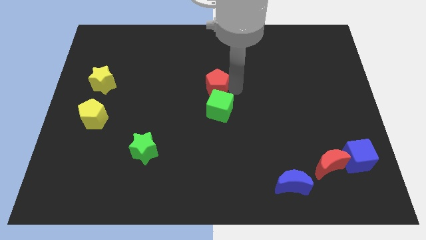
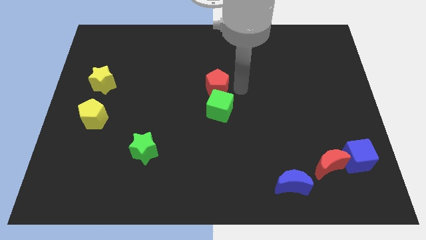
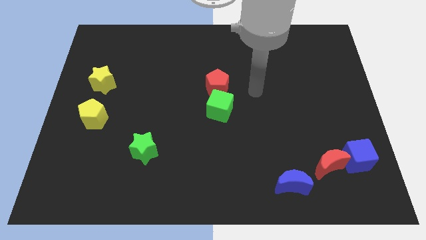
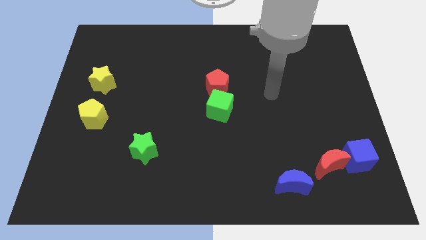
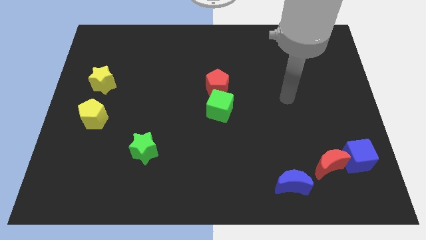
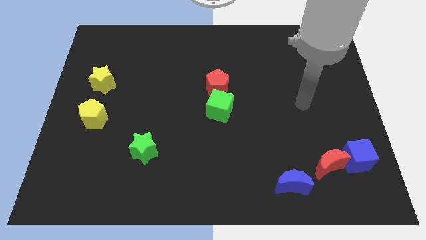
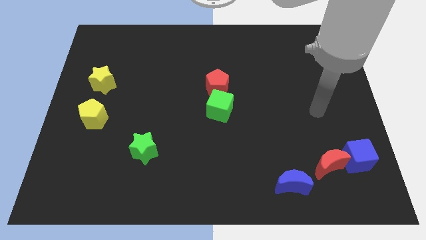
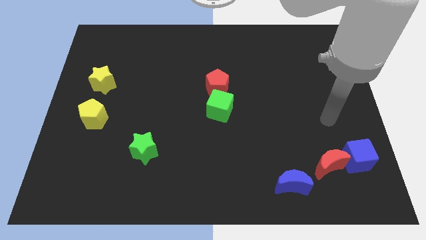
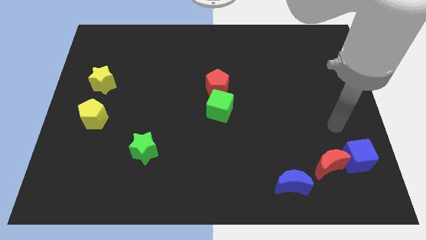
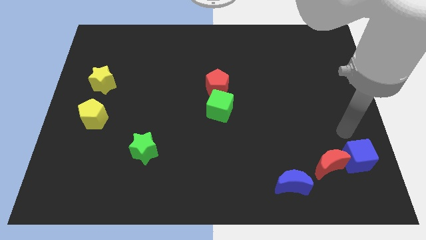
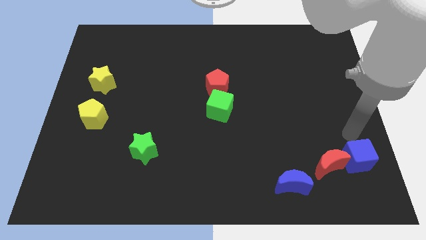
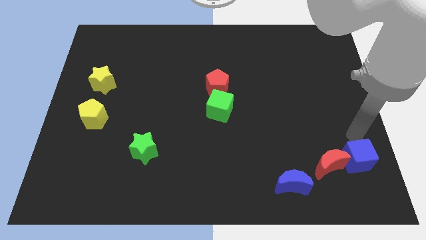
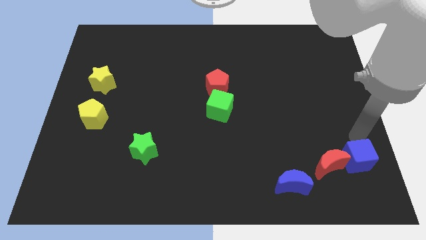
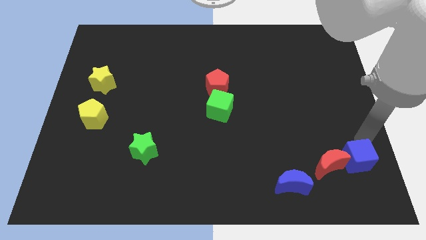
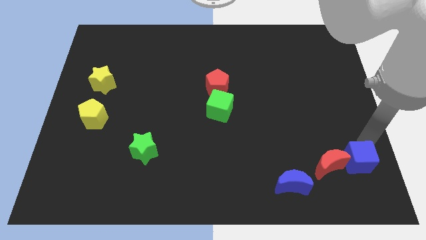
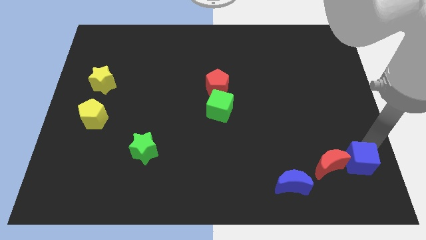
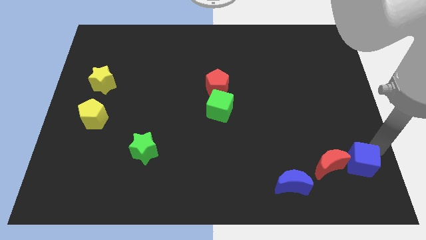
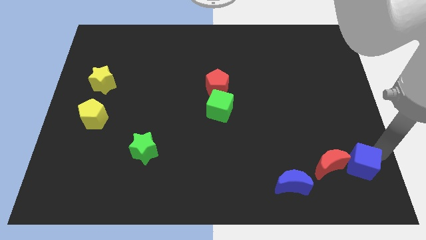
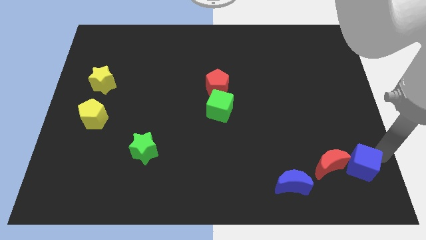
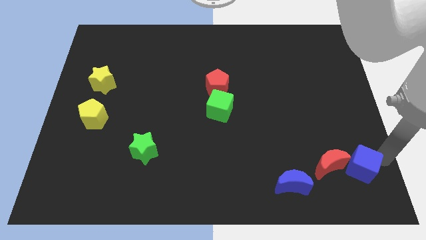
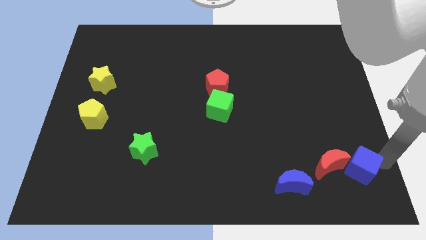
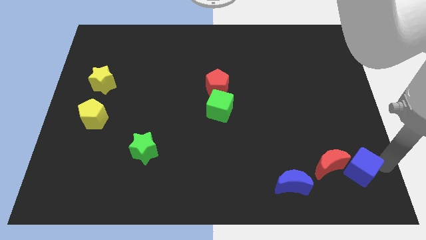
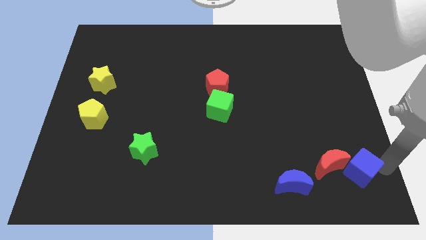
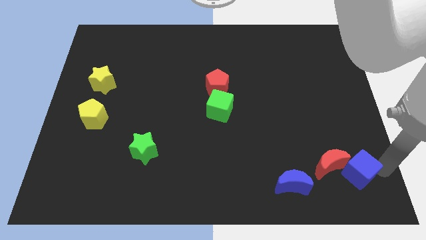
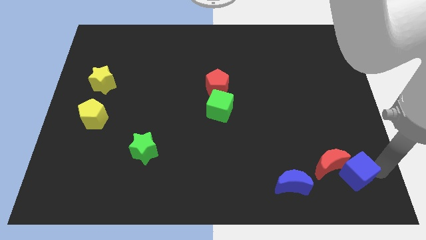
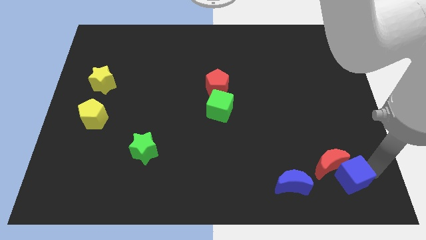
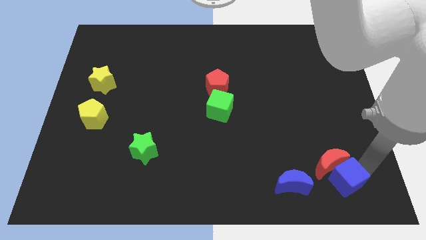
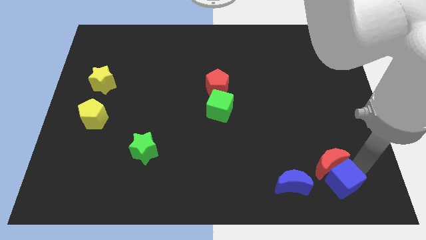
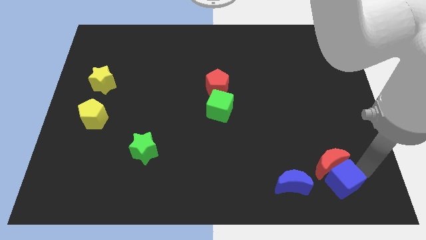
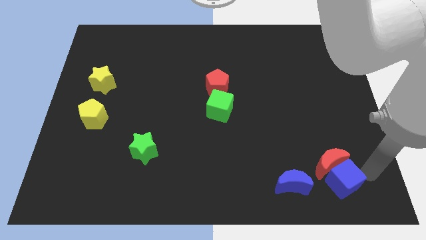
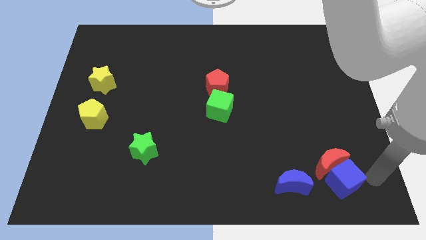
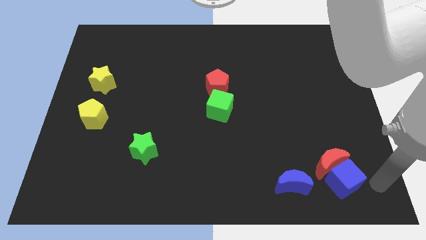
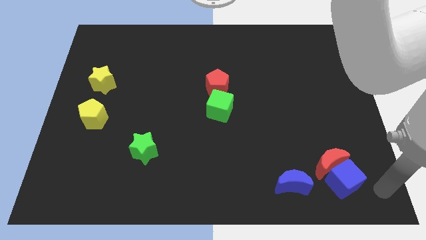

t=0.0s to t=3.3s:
move the blue cube to the bottom of the red crescent

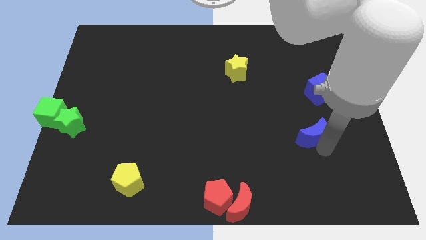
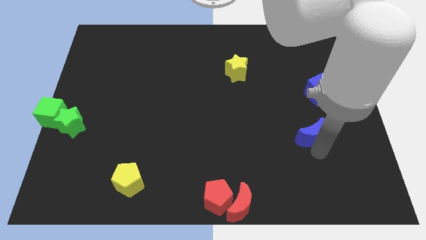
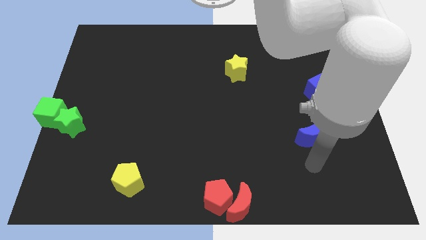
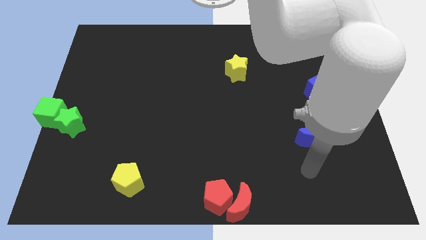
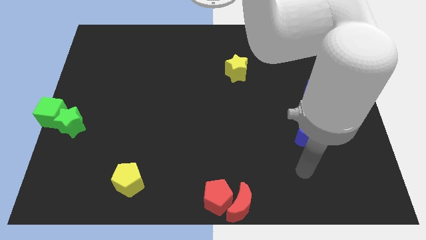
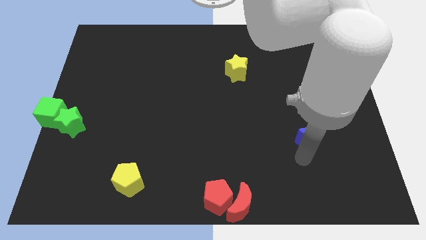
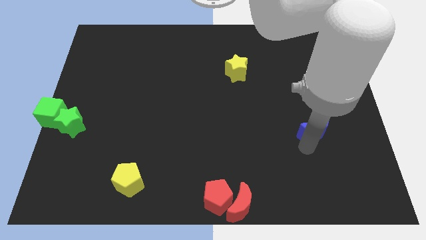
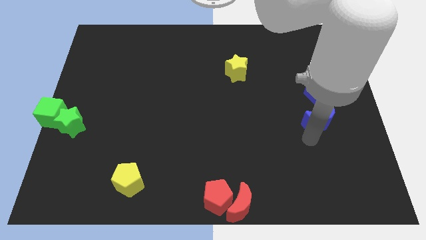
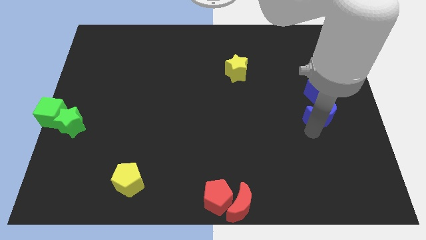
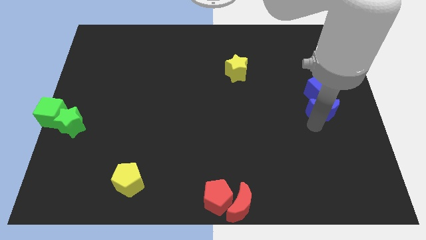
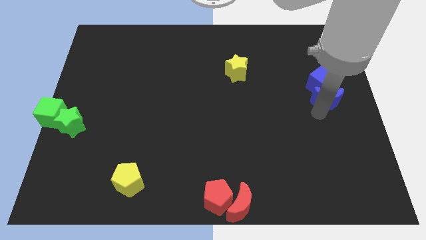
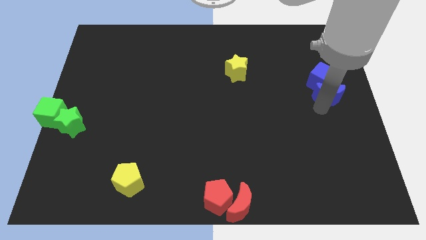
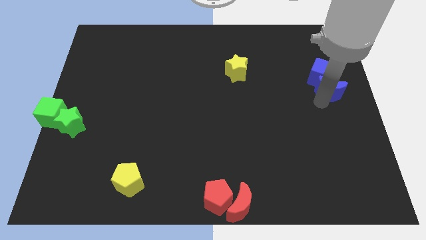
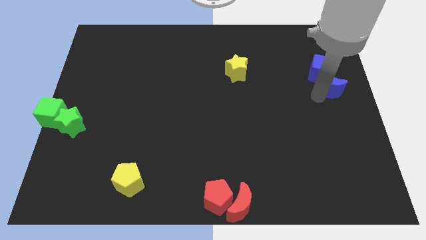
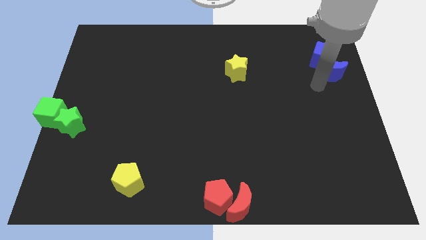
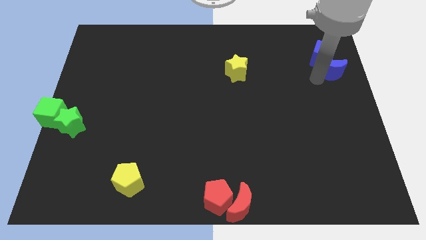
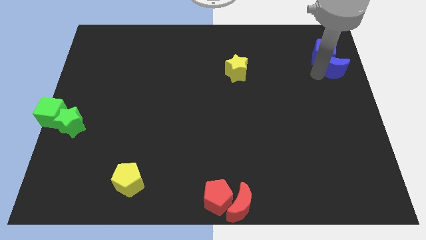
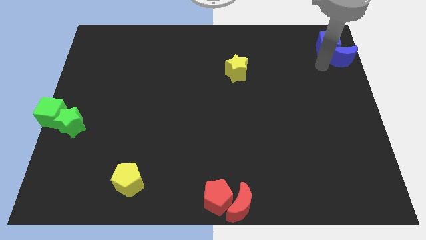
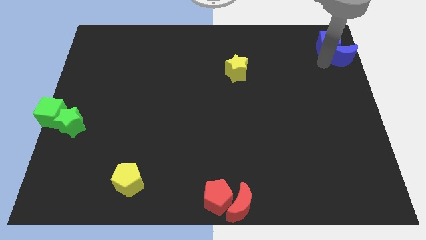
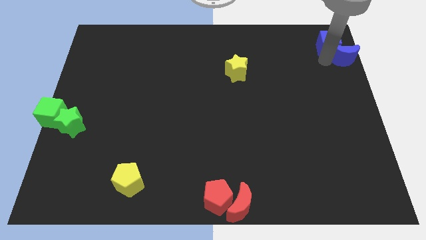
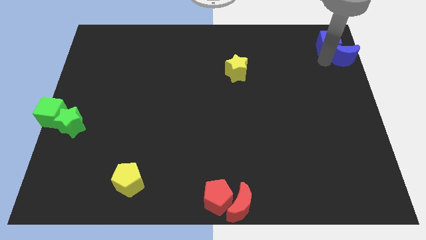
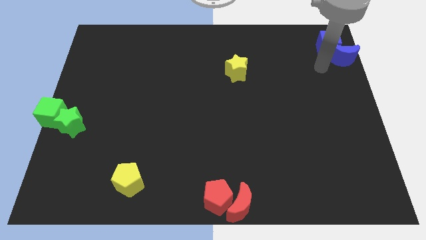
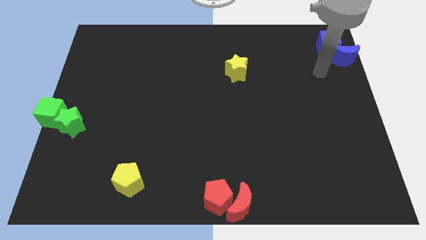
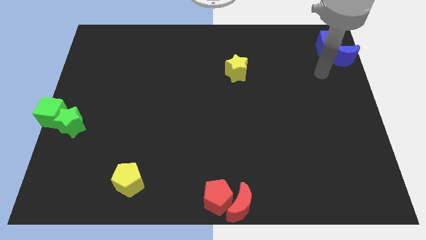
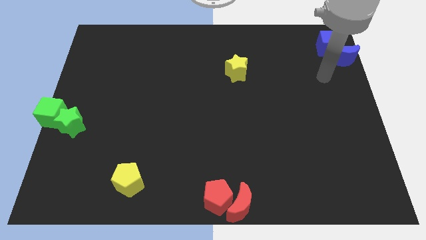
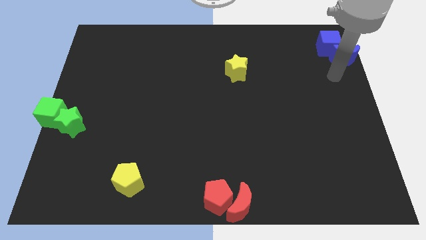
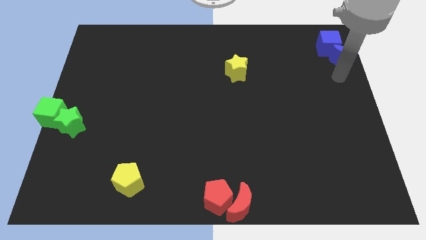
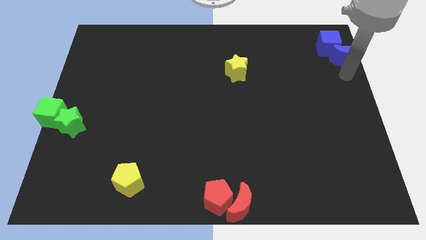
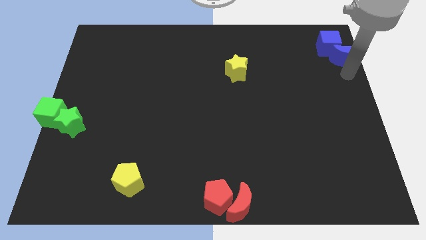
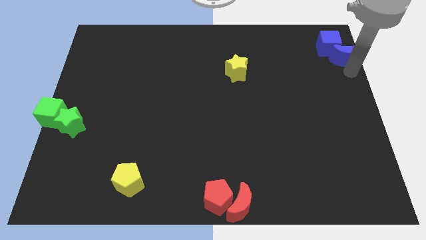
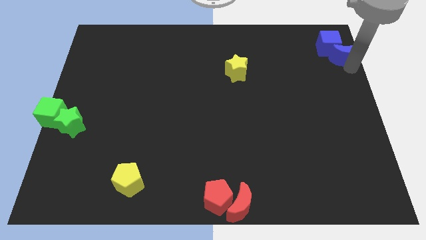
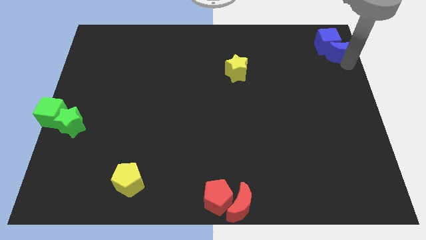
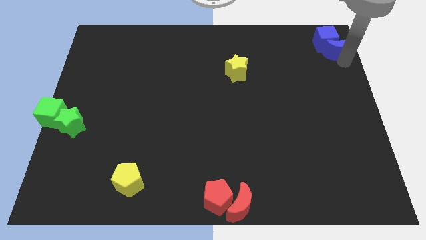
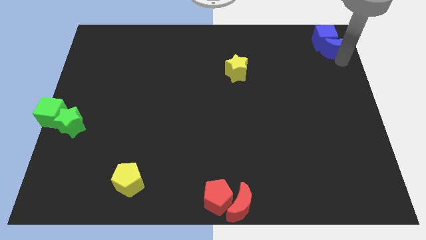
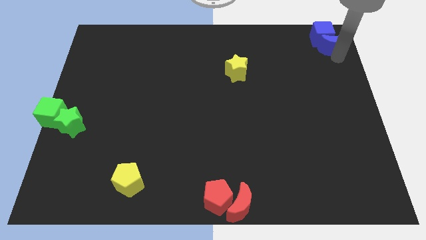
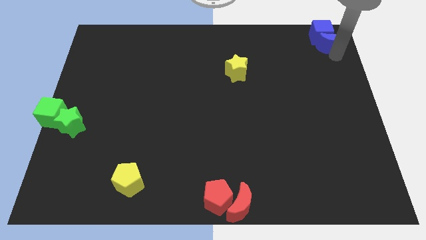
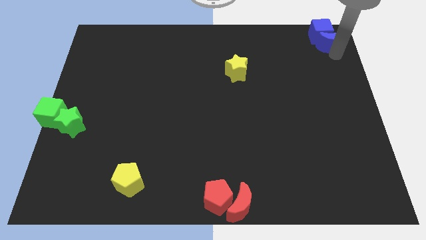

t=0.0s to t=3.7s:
move the blue blocks to the top right of the board

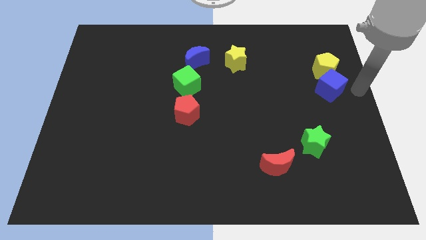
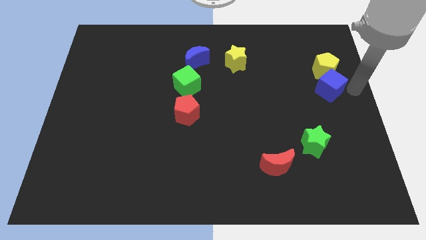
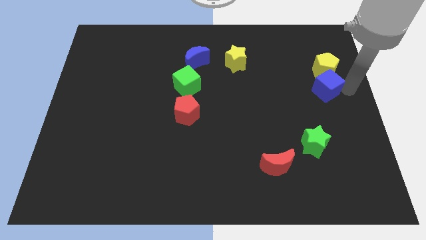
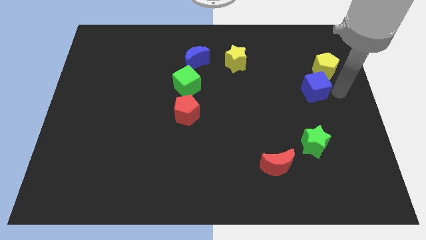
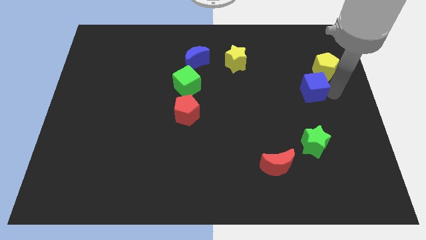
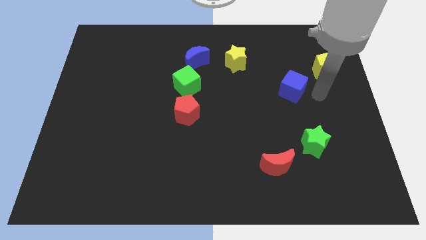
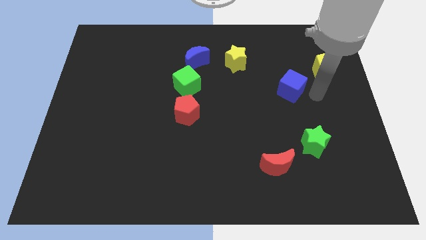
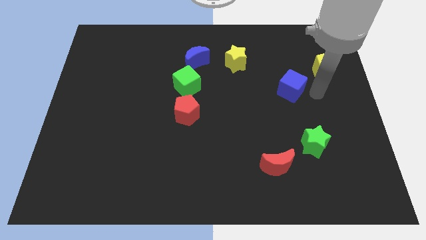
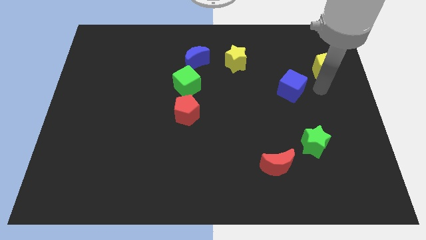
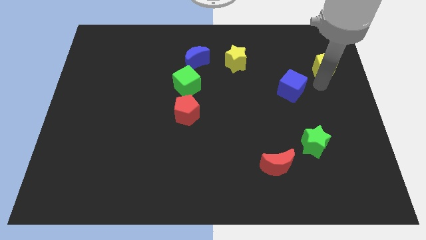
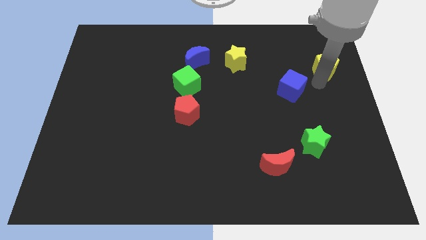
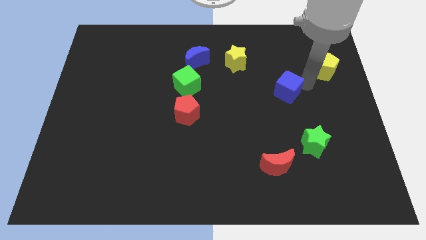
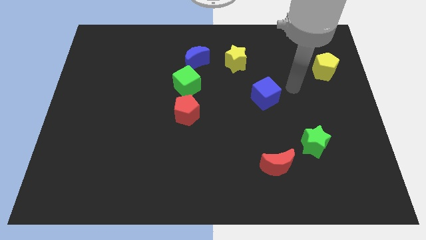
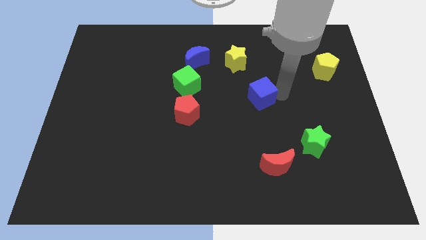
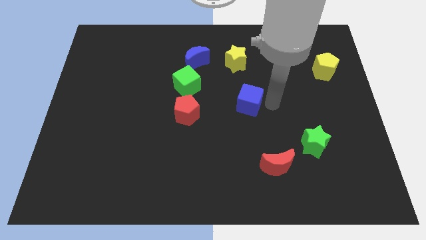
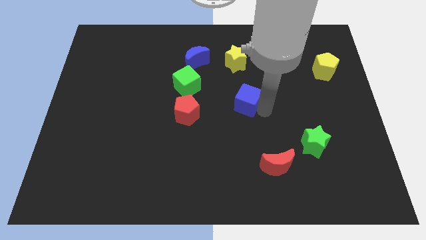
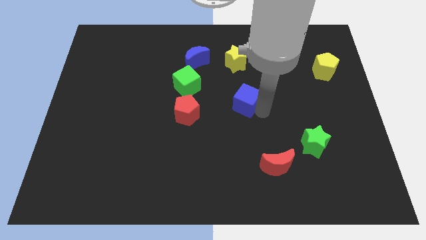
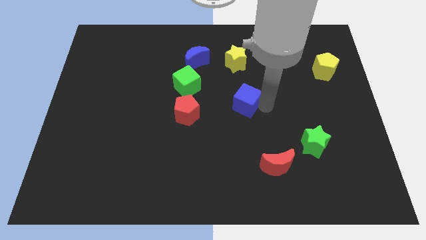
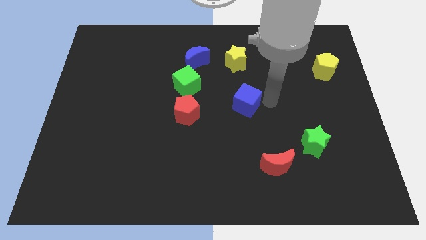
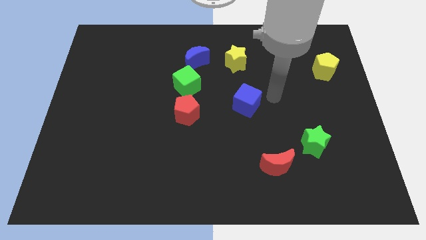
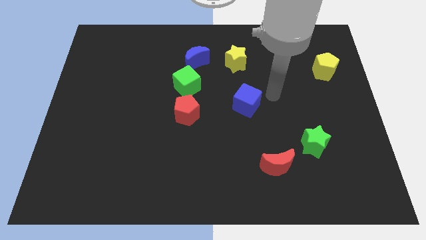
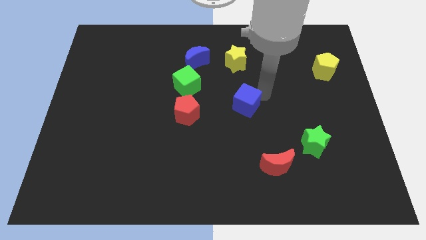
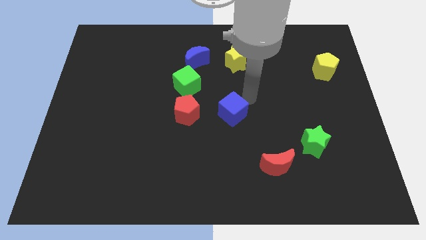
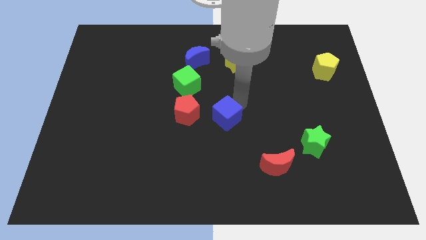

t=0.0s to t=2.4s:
slide the blue cube right to the red pentagon
